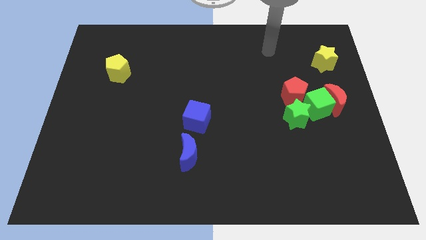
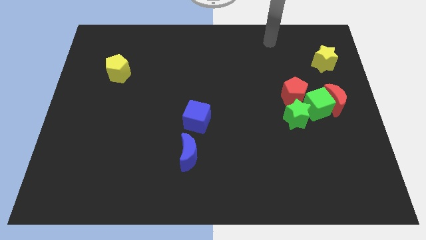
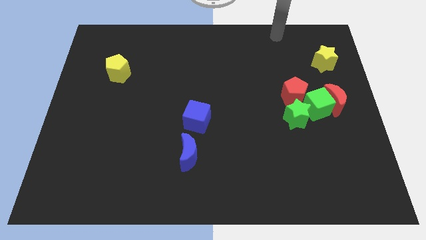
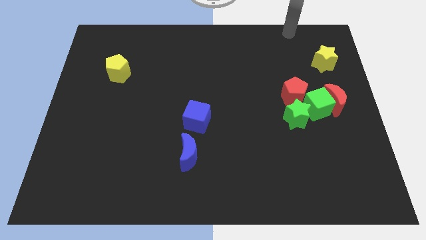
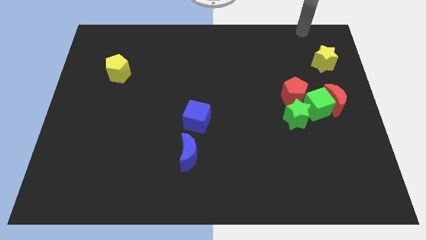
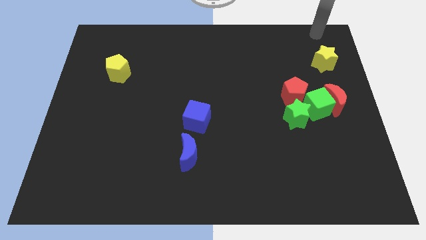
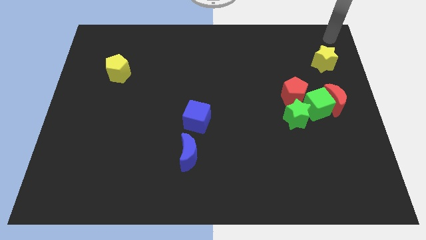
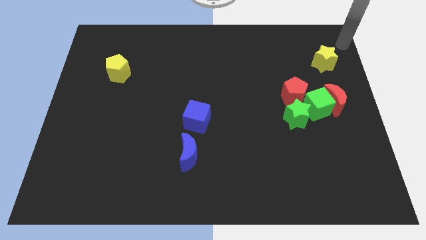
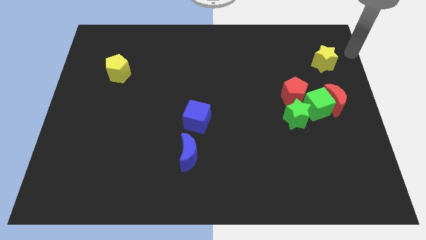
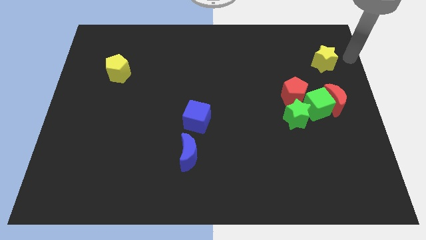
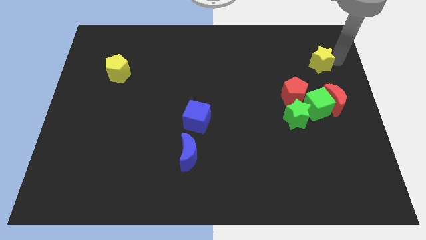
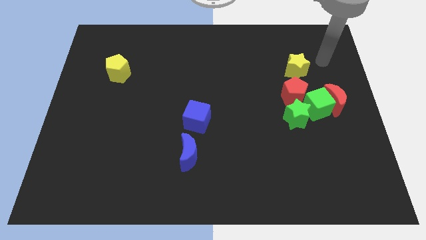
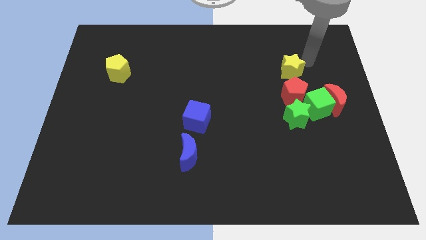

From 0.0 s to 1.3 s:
place the yellow star above the red pentagon

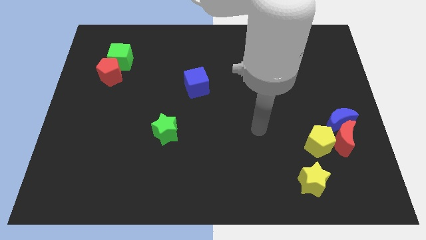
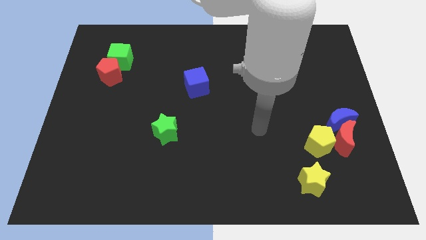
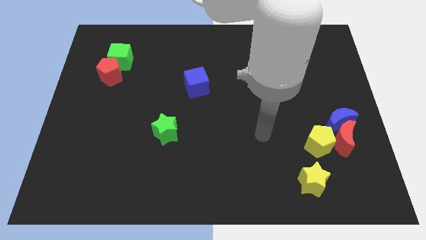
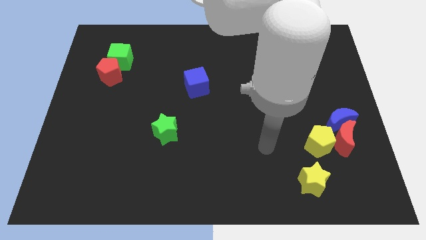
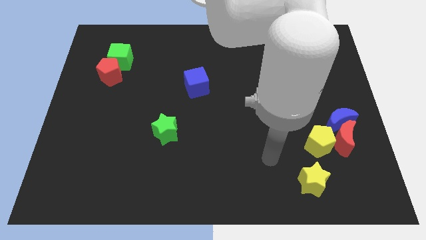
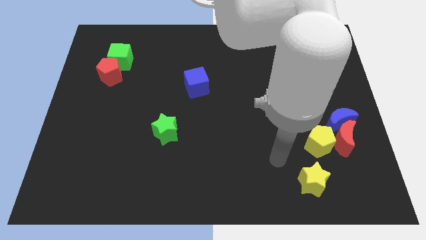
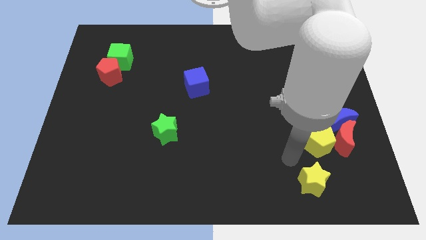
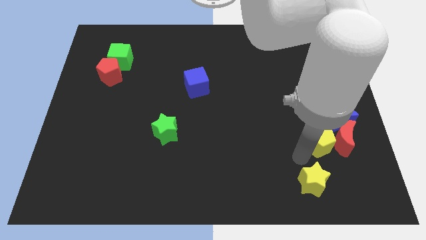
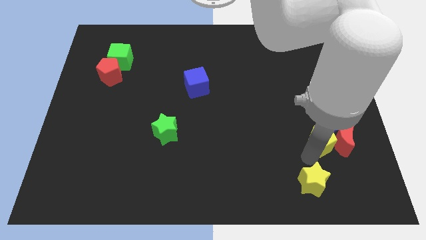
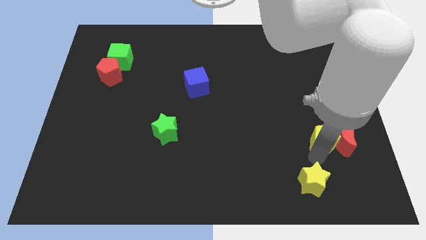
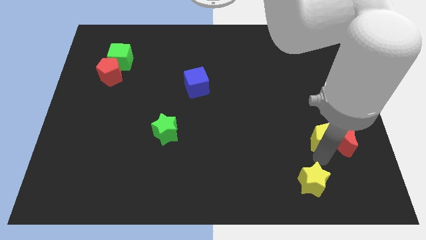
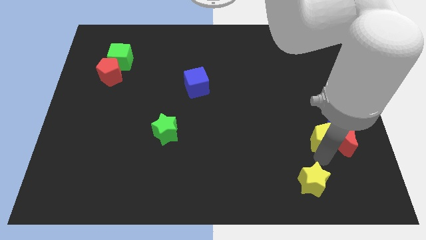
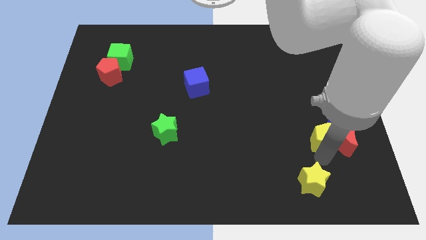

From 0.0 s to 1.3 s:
point your arm between yellow pentagon and yellow star

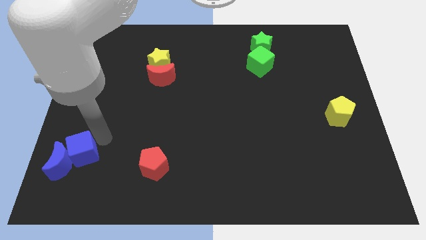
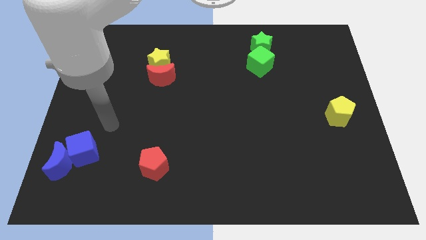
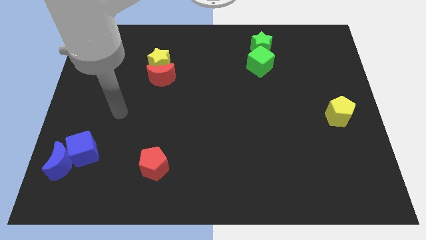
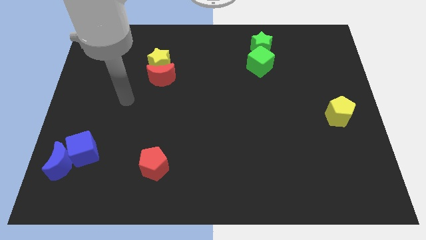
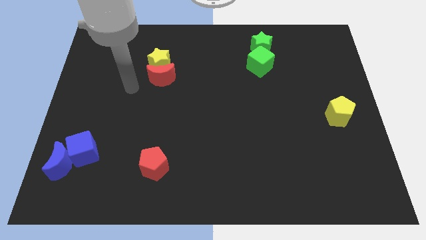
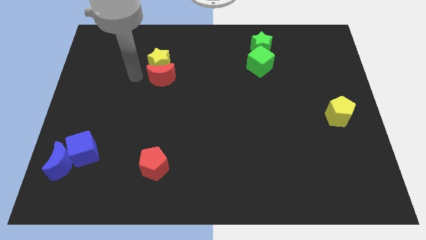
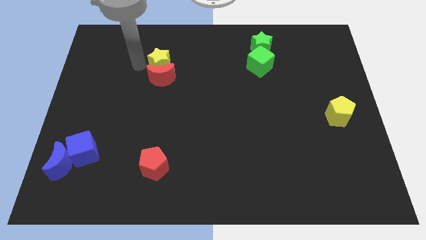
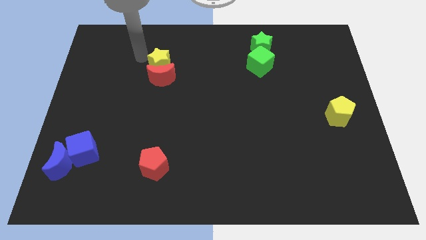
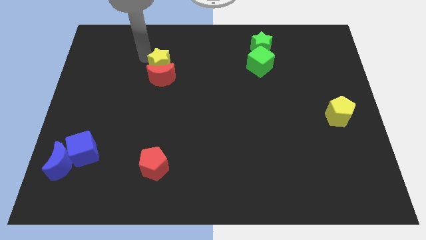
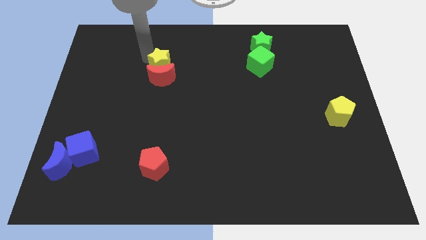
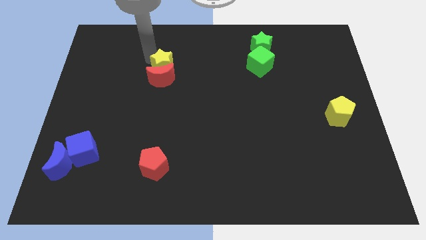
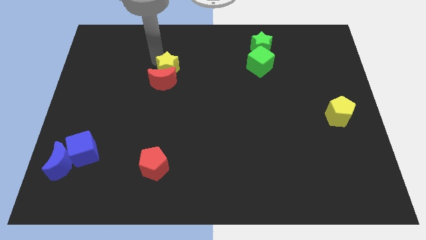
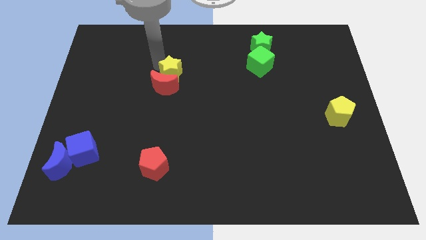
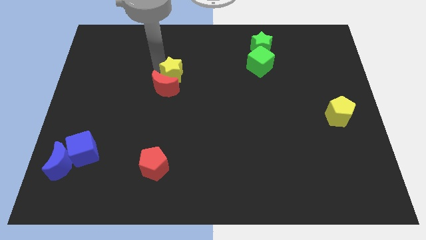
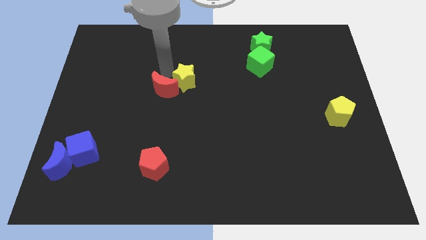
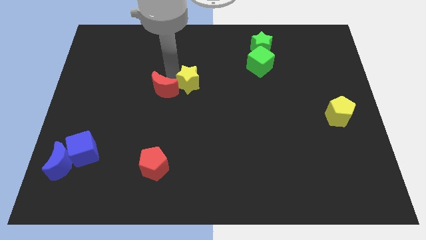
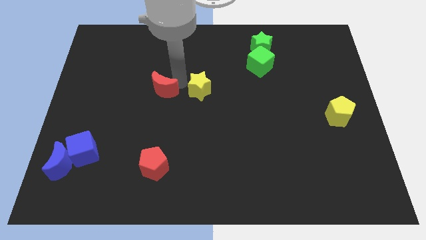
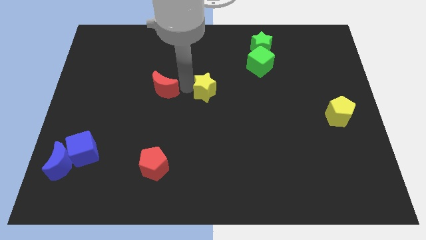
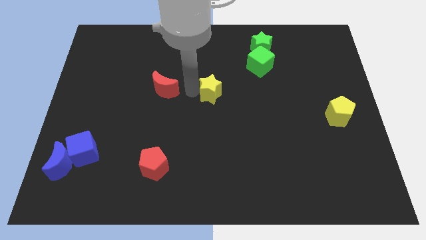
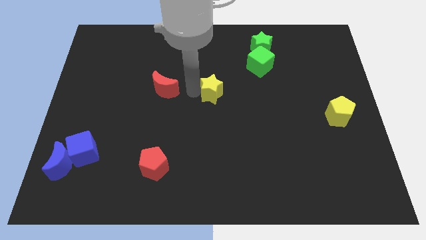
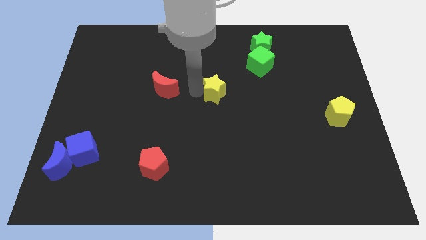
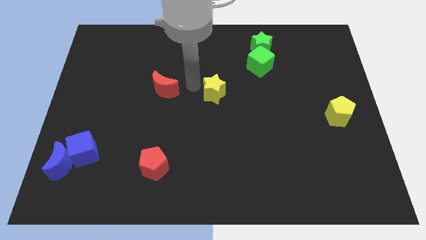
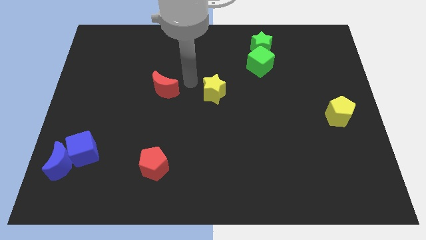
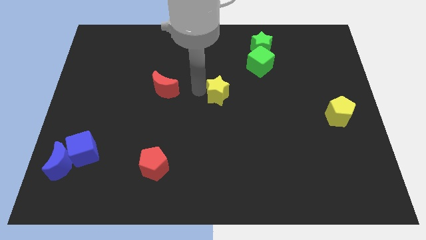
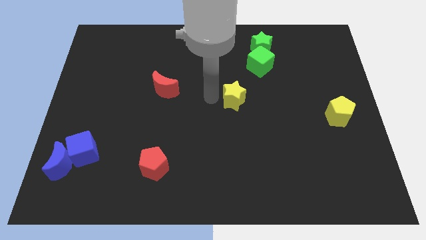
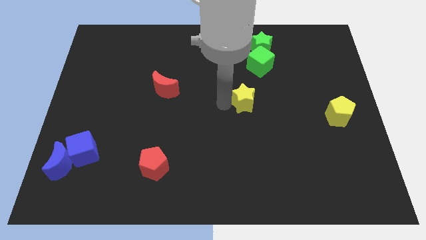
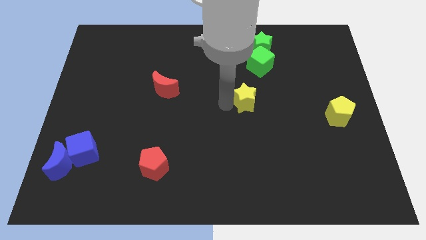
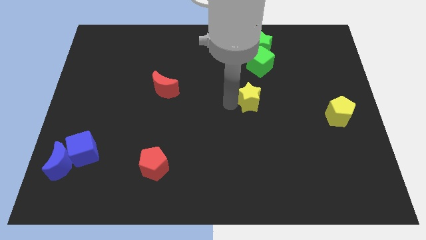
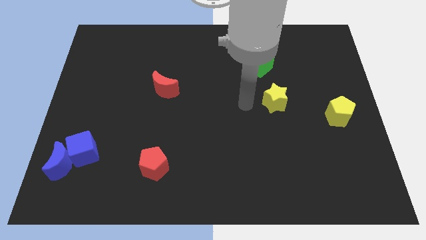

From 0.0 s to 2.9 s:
place the yellow star in between the yellow pentgaon and red moon

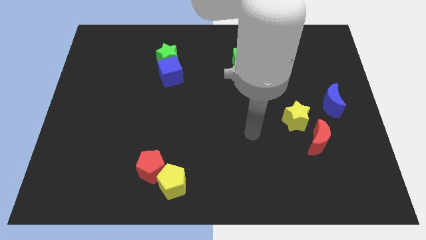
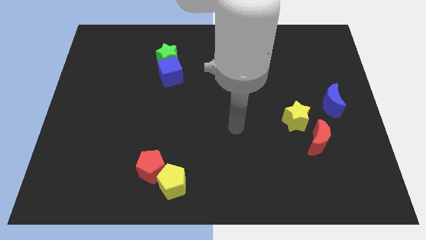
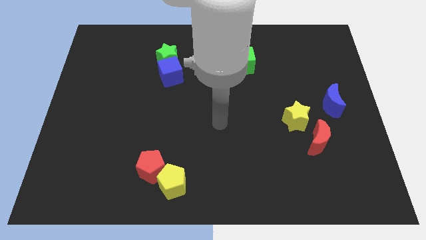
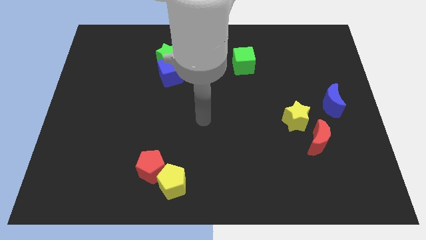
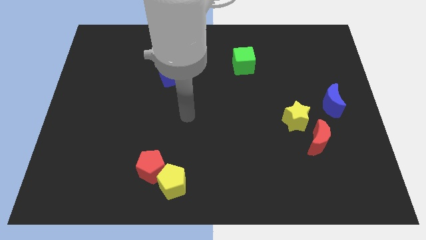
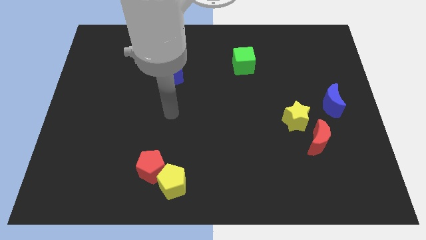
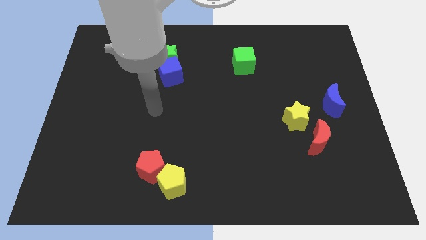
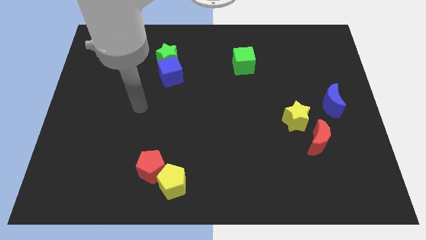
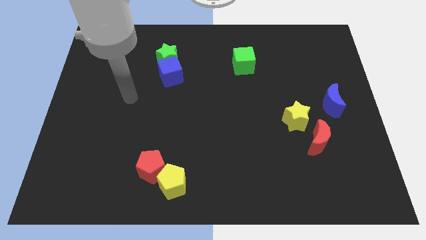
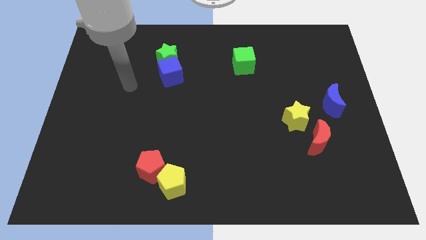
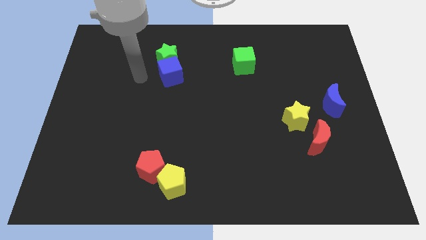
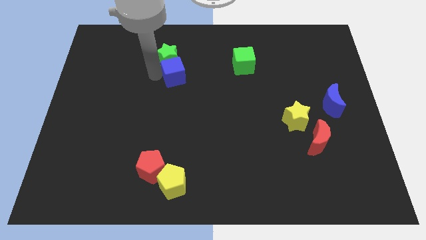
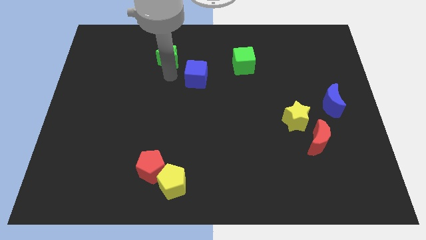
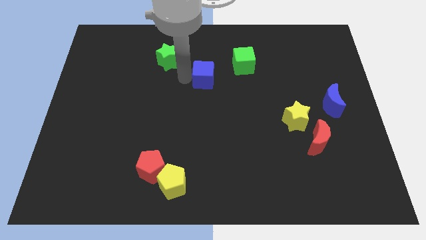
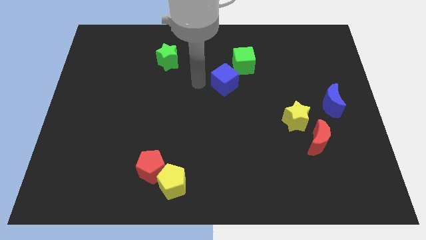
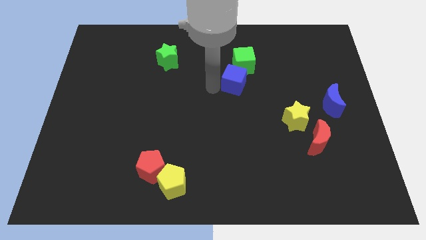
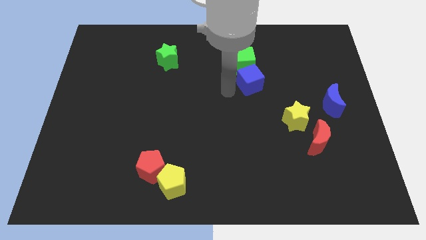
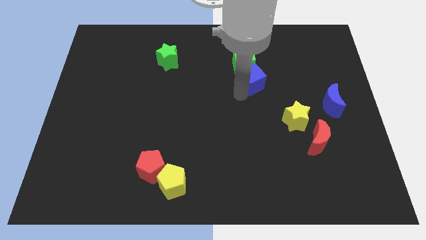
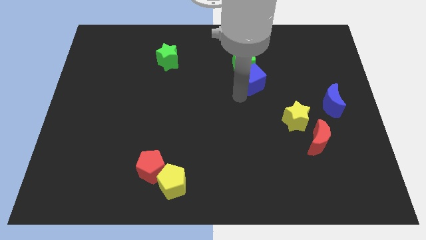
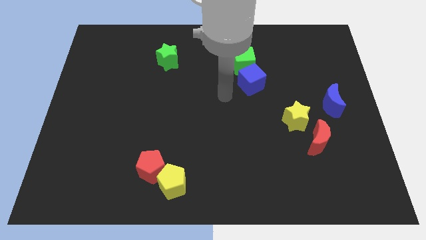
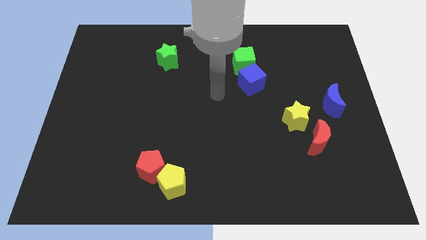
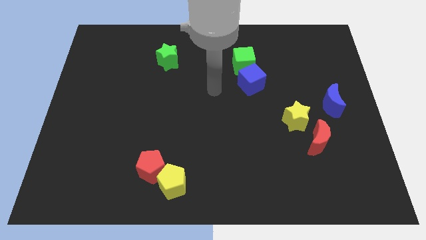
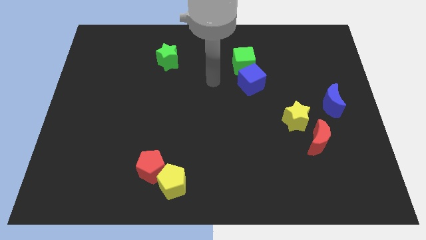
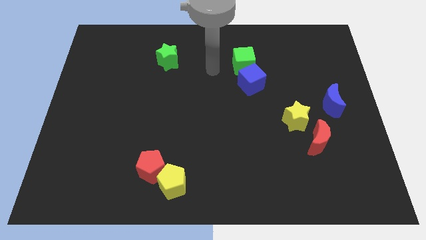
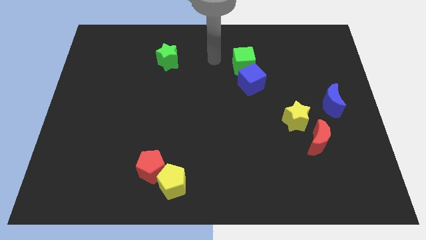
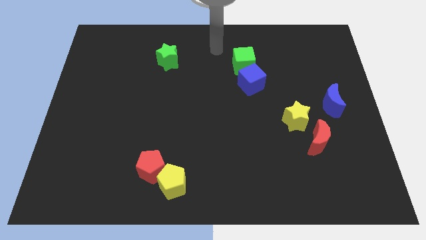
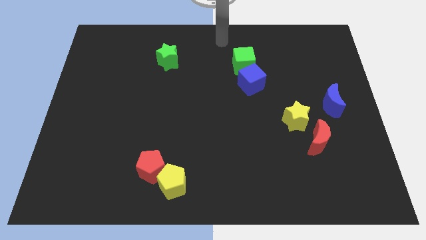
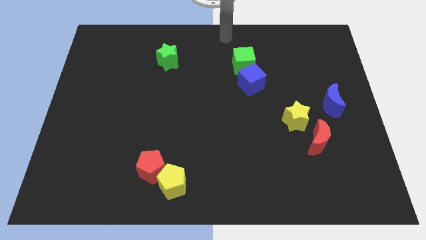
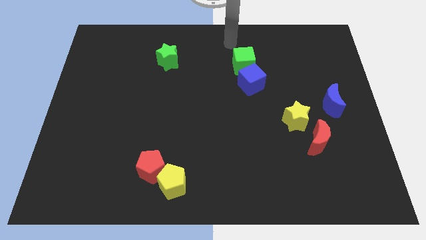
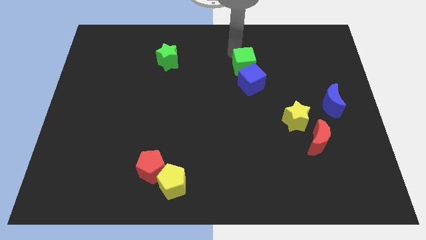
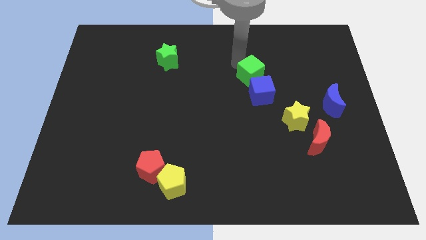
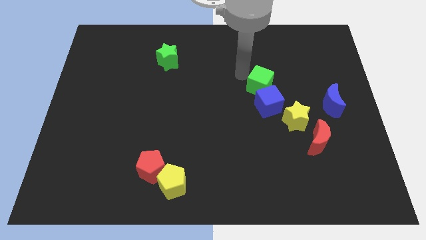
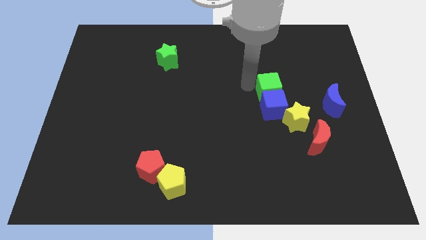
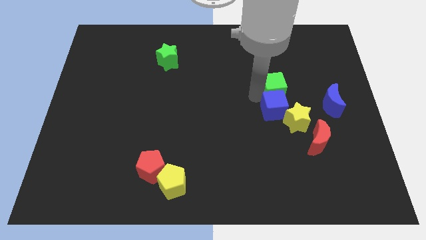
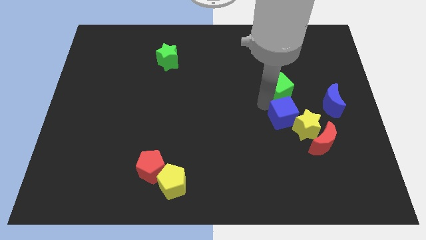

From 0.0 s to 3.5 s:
push blue and green cube into group of blocks

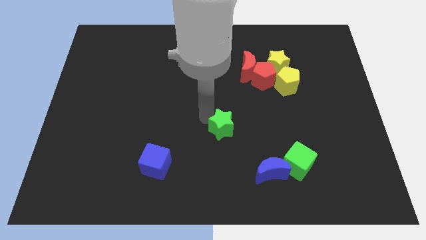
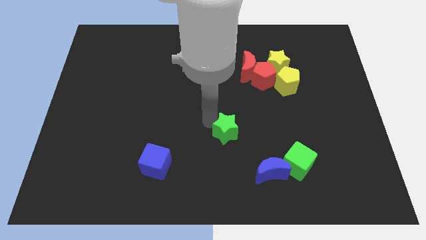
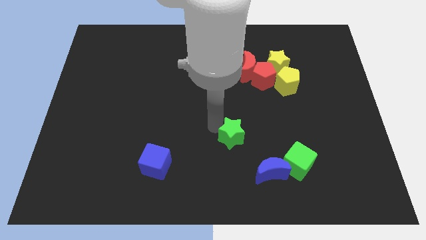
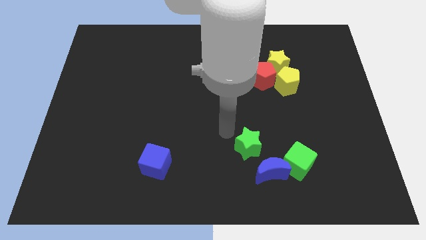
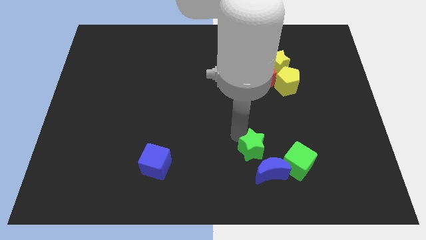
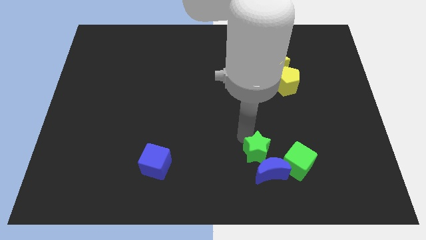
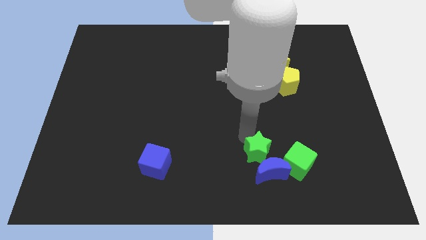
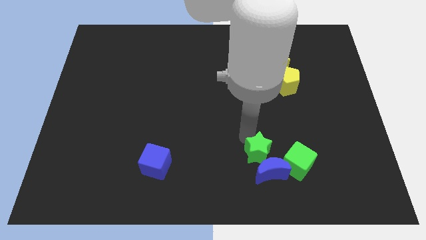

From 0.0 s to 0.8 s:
place the green star above the blue crescent
